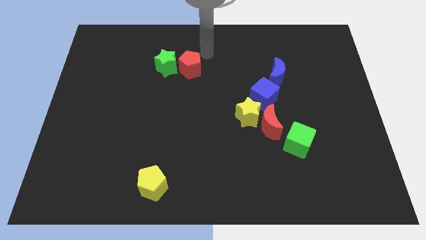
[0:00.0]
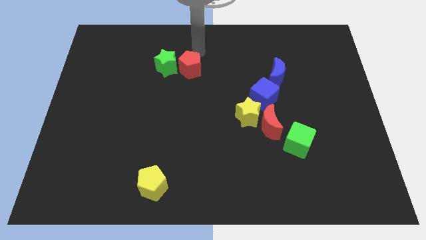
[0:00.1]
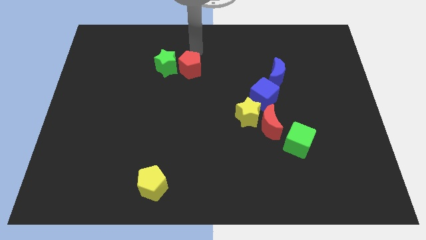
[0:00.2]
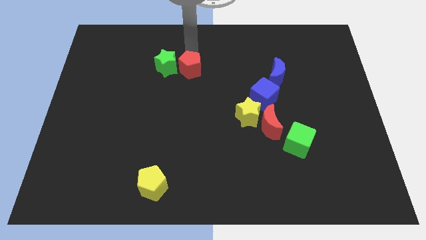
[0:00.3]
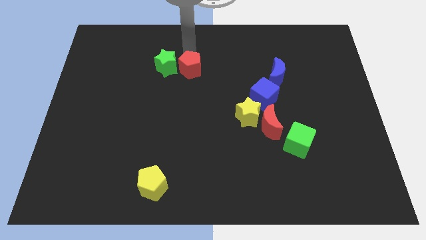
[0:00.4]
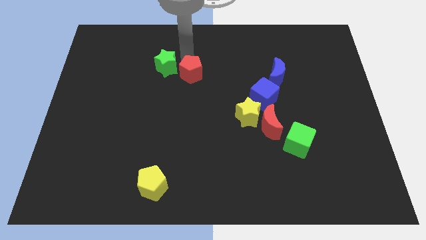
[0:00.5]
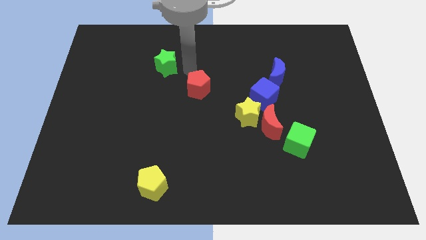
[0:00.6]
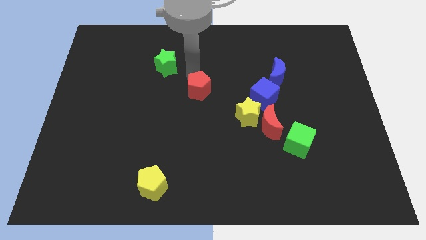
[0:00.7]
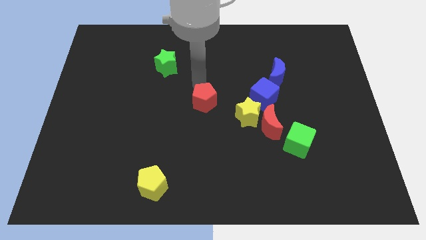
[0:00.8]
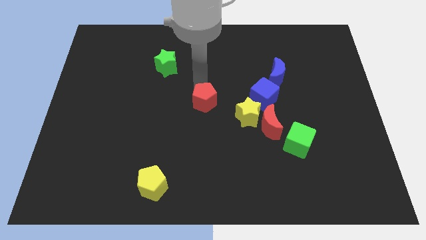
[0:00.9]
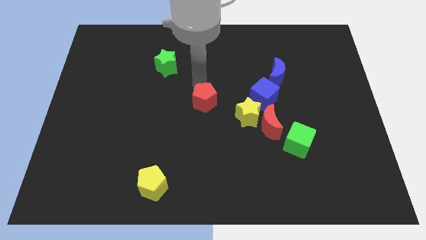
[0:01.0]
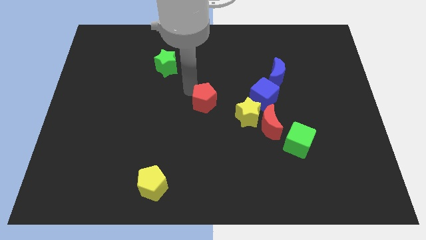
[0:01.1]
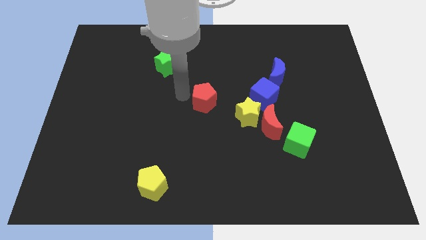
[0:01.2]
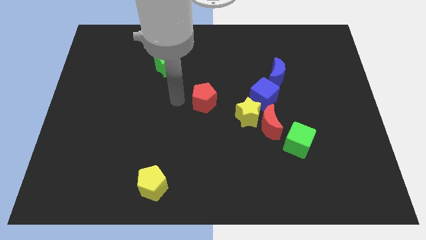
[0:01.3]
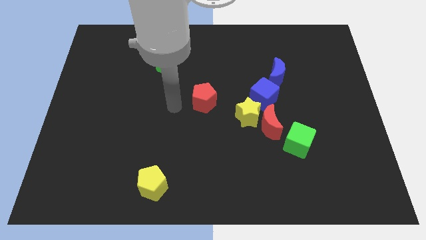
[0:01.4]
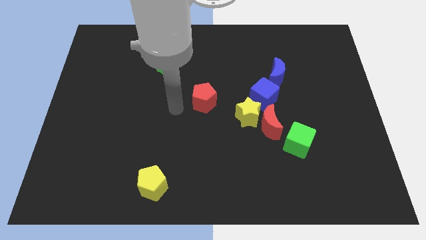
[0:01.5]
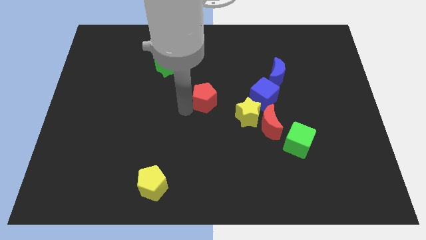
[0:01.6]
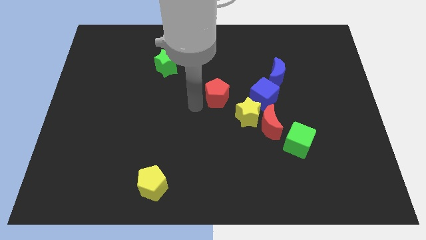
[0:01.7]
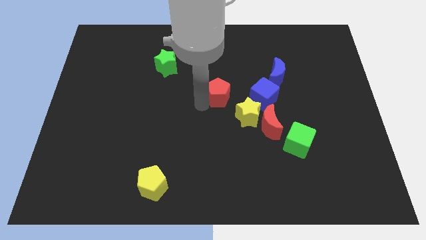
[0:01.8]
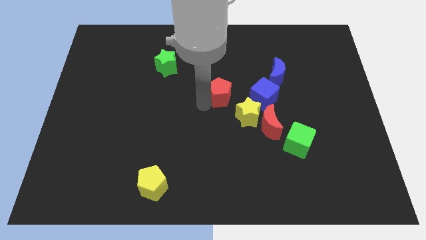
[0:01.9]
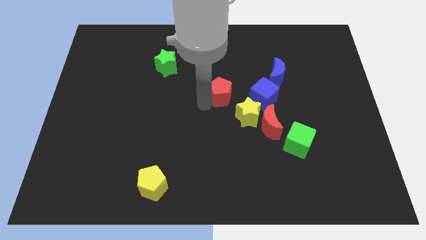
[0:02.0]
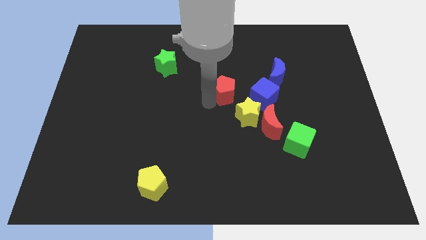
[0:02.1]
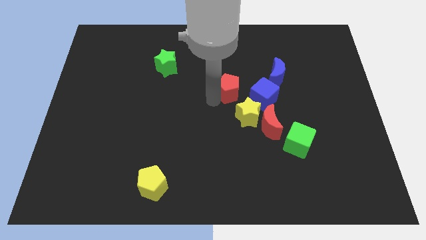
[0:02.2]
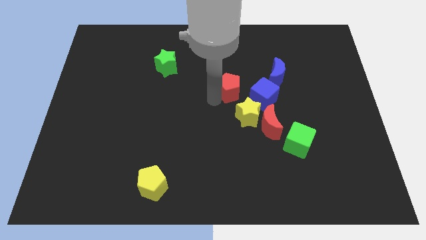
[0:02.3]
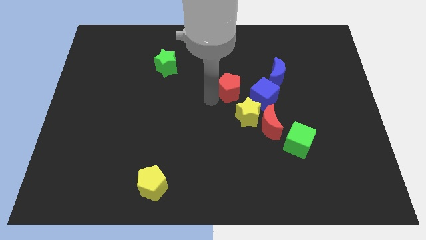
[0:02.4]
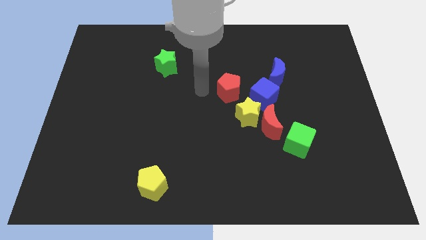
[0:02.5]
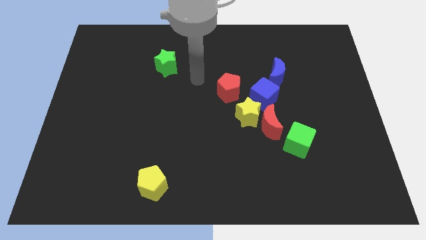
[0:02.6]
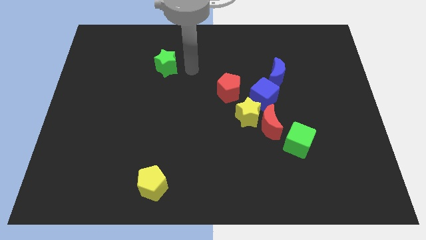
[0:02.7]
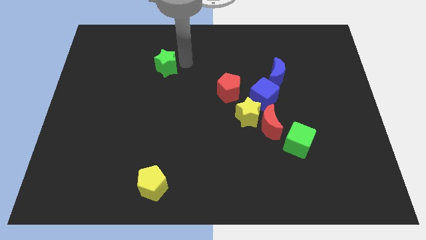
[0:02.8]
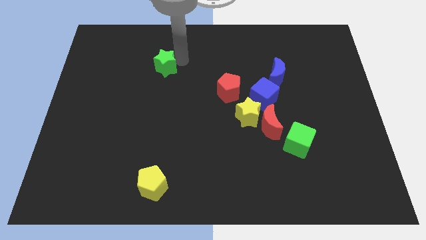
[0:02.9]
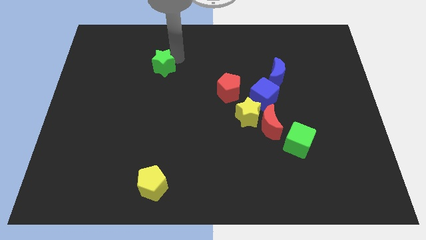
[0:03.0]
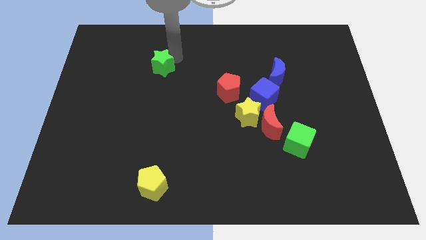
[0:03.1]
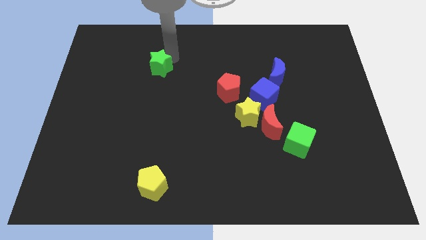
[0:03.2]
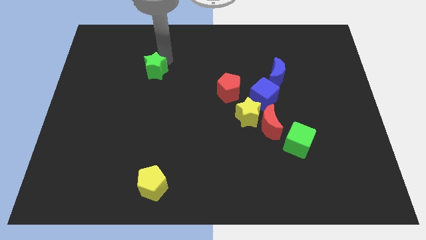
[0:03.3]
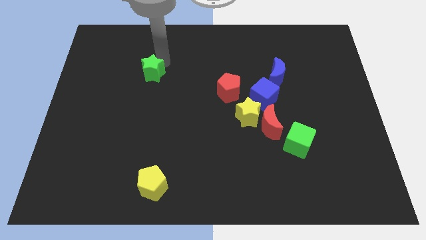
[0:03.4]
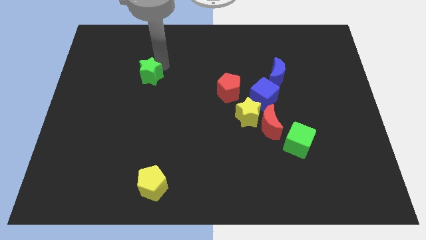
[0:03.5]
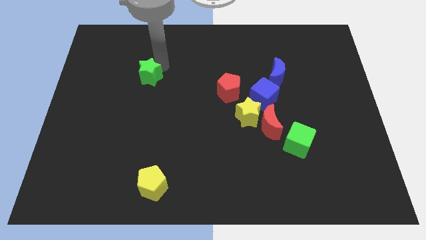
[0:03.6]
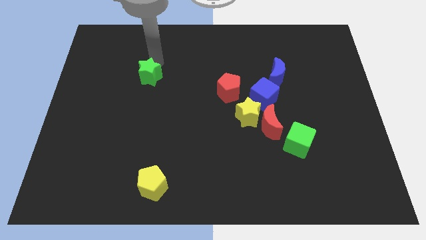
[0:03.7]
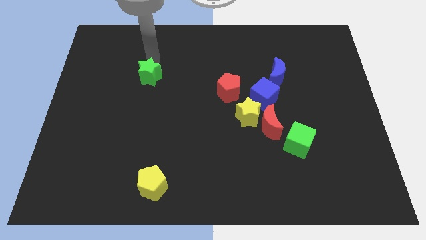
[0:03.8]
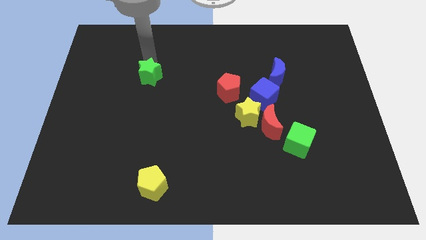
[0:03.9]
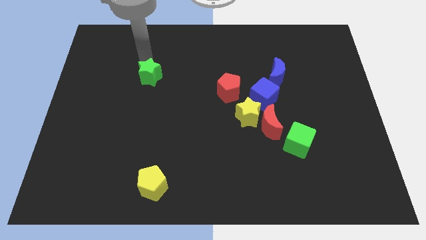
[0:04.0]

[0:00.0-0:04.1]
move red pentagon towards the blue cube

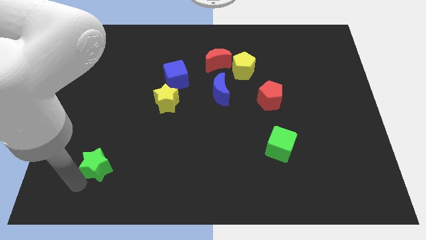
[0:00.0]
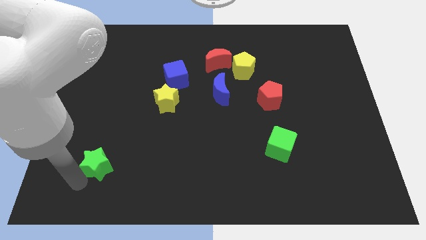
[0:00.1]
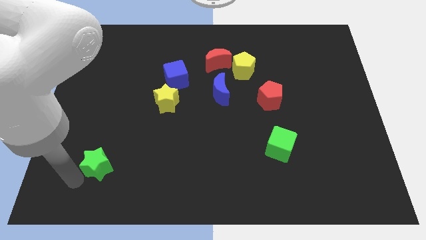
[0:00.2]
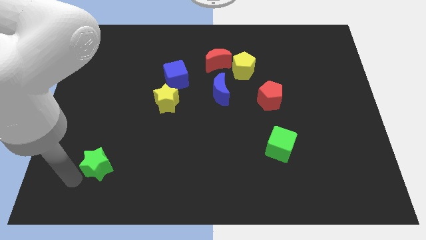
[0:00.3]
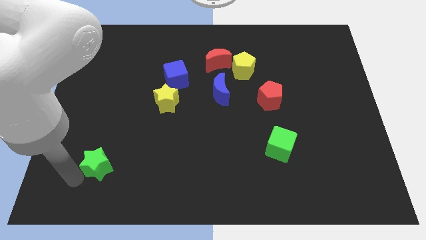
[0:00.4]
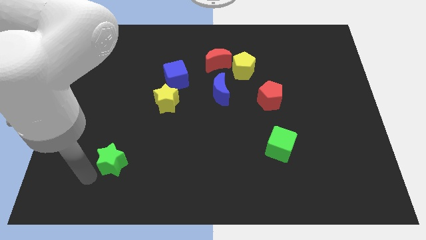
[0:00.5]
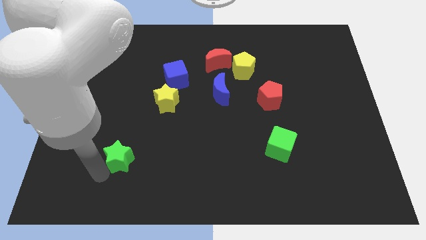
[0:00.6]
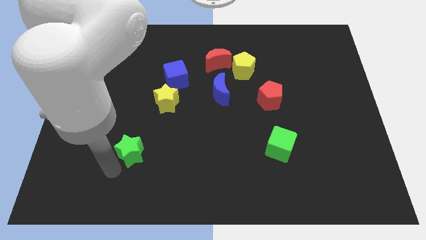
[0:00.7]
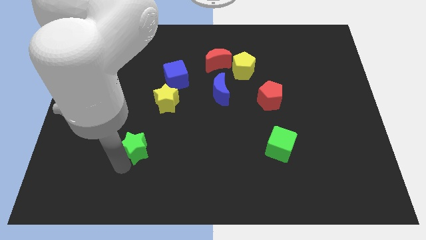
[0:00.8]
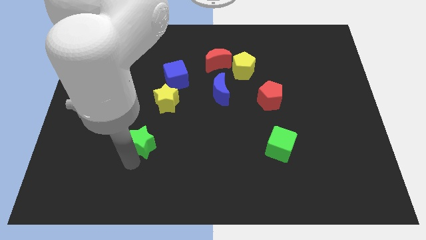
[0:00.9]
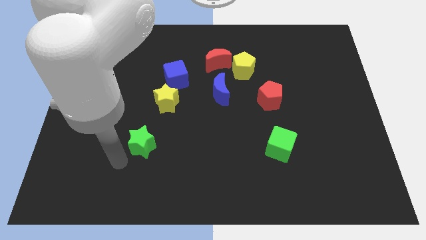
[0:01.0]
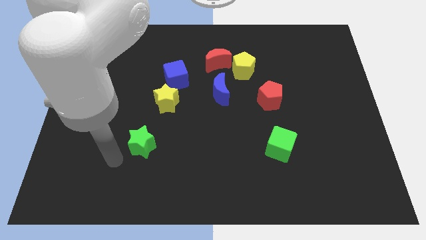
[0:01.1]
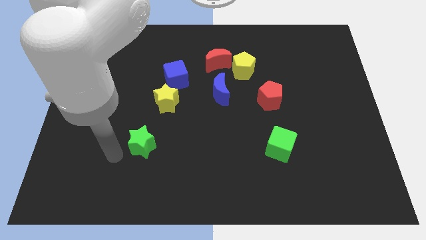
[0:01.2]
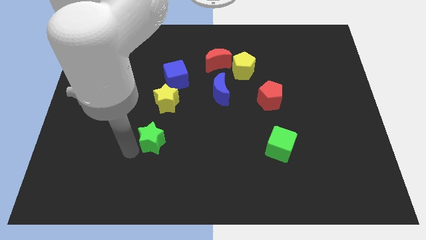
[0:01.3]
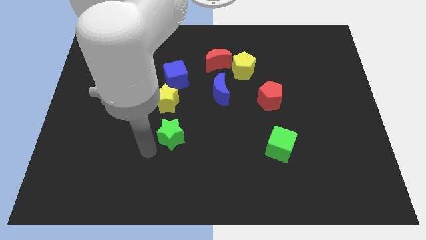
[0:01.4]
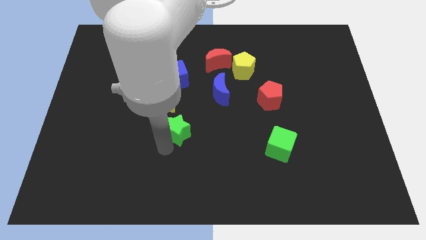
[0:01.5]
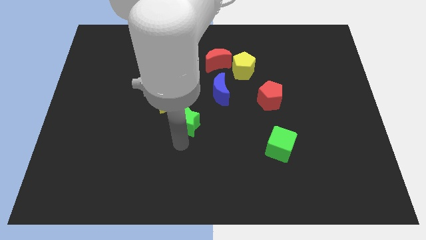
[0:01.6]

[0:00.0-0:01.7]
push the green star towards the yellow star

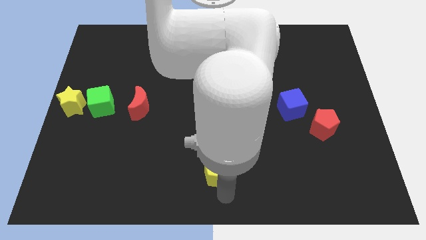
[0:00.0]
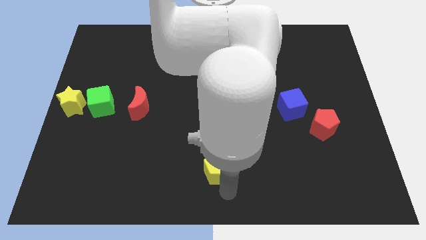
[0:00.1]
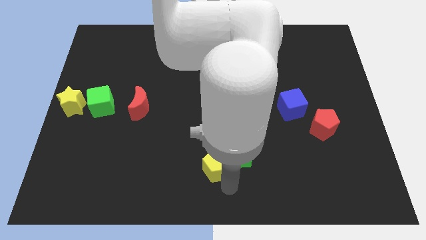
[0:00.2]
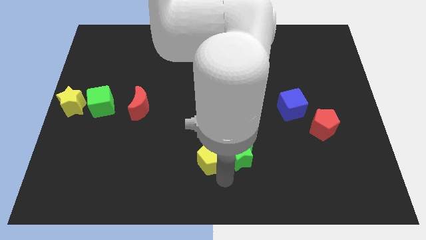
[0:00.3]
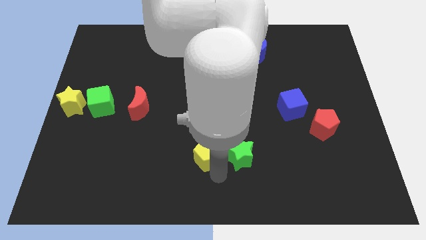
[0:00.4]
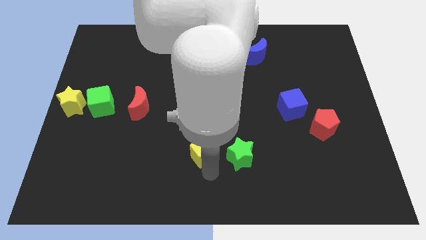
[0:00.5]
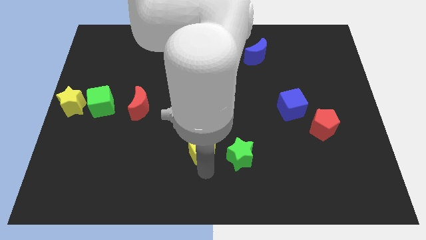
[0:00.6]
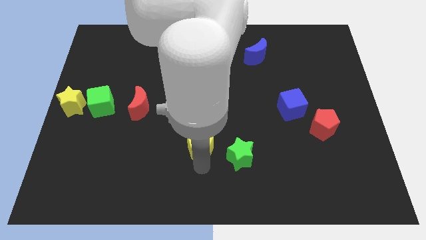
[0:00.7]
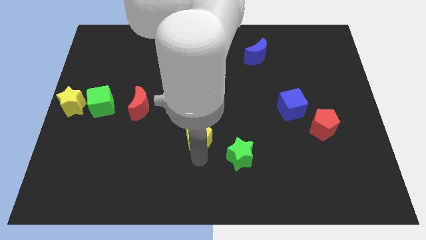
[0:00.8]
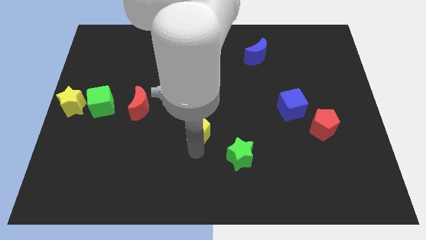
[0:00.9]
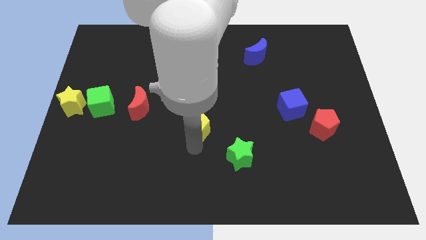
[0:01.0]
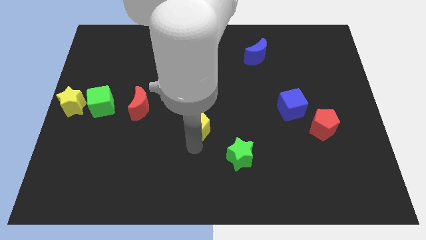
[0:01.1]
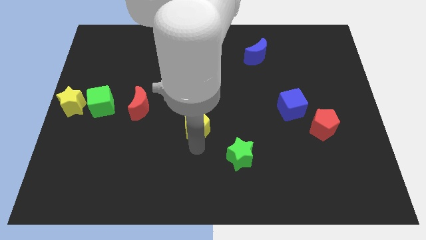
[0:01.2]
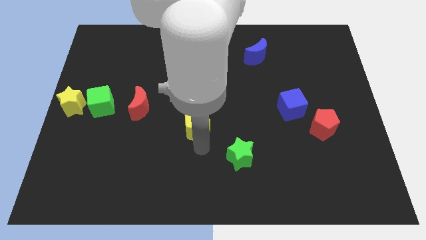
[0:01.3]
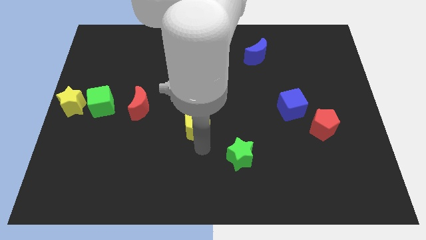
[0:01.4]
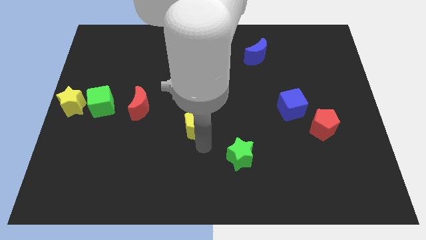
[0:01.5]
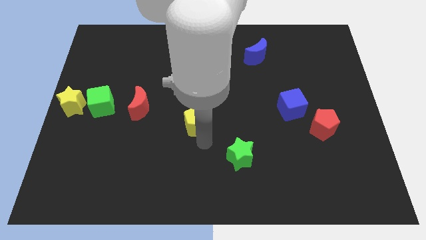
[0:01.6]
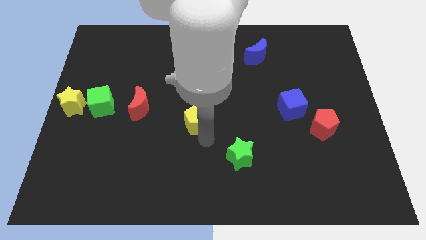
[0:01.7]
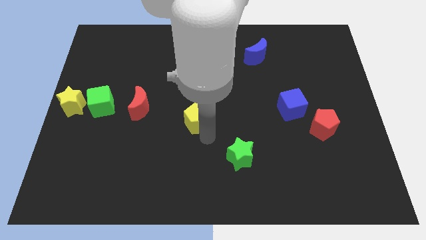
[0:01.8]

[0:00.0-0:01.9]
separate the yellow pentagon from the green star

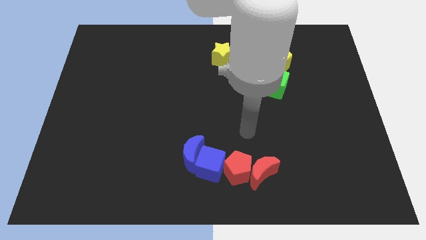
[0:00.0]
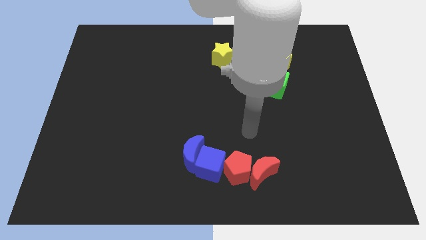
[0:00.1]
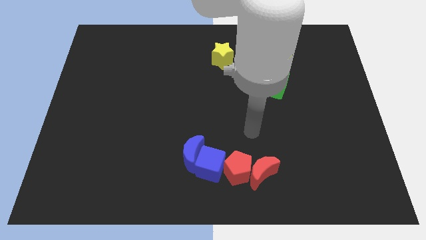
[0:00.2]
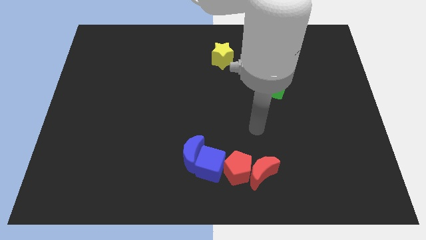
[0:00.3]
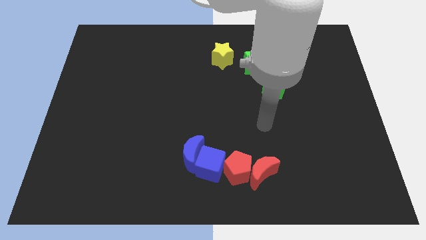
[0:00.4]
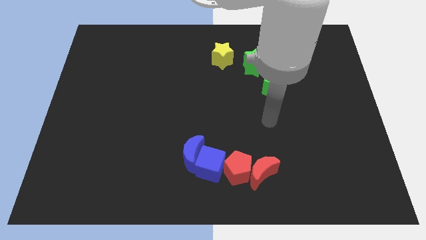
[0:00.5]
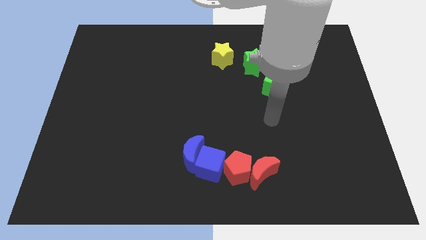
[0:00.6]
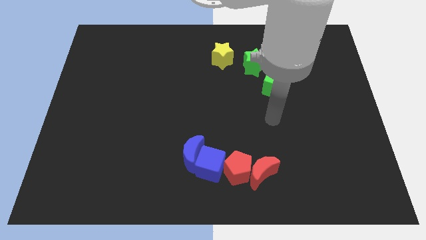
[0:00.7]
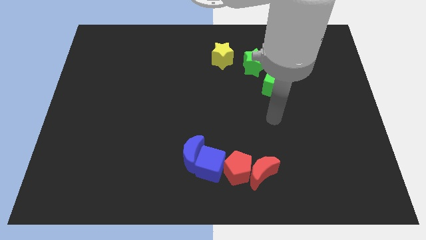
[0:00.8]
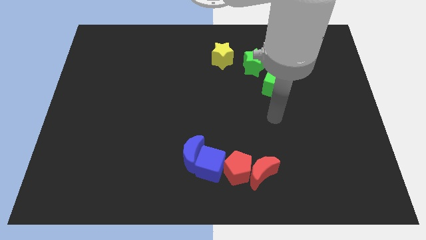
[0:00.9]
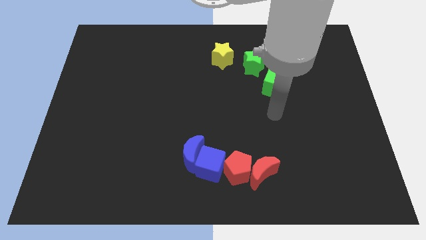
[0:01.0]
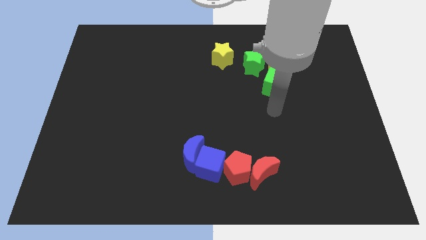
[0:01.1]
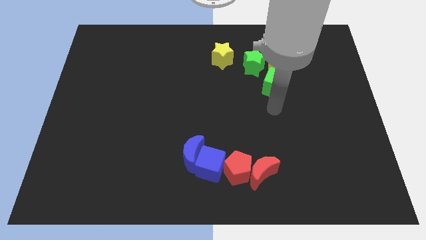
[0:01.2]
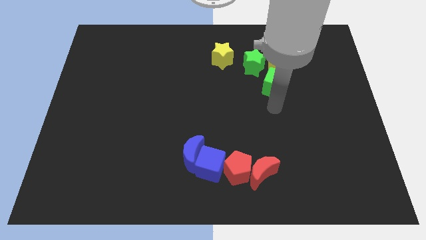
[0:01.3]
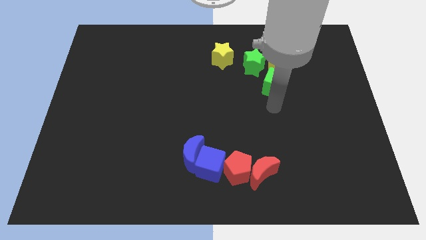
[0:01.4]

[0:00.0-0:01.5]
move your arm to the bottom of the green cube
